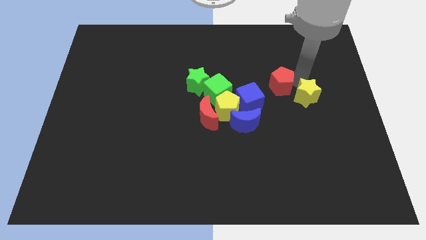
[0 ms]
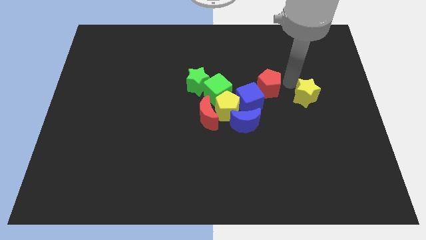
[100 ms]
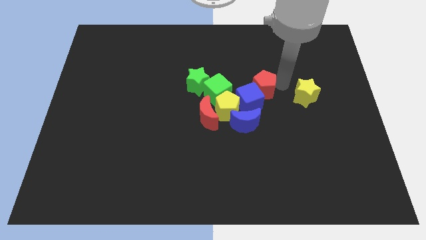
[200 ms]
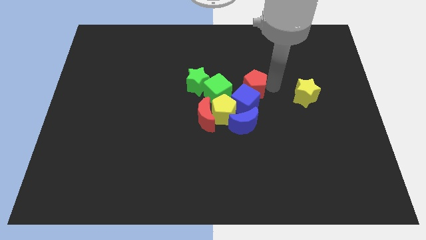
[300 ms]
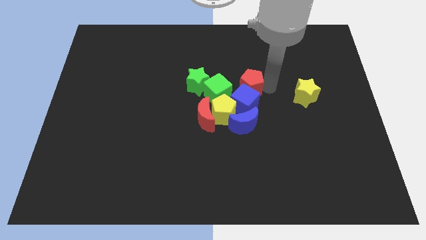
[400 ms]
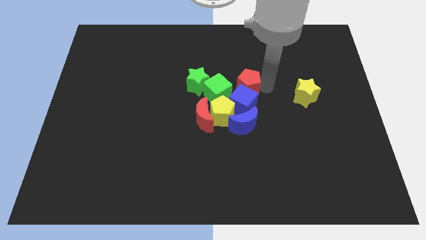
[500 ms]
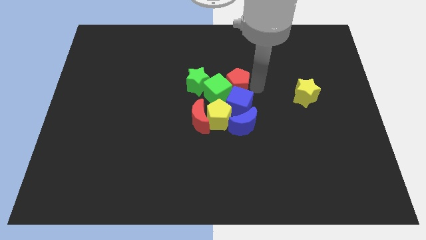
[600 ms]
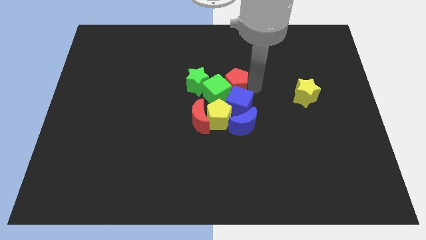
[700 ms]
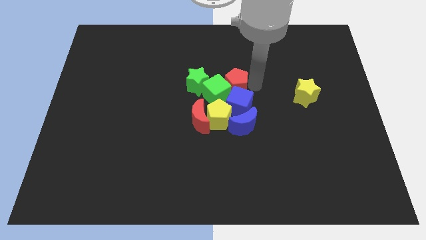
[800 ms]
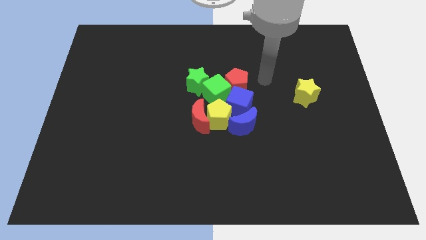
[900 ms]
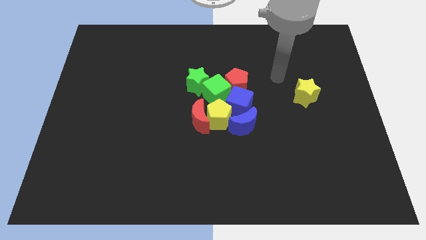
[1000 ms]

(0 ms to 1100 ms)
move the red pentagon into the group of blocks

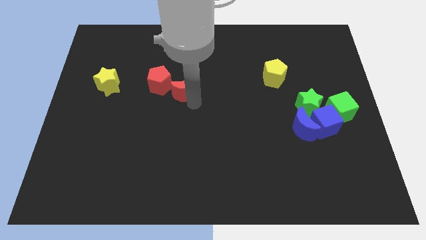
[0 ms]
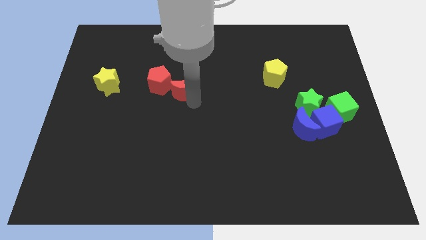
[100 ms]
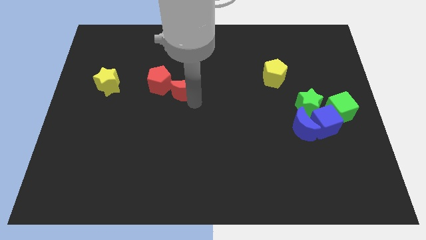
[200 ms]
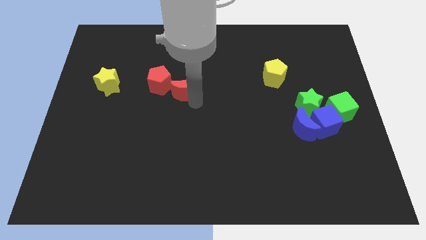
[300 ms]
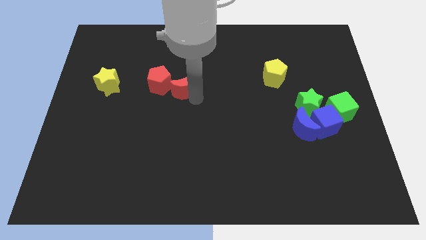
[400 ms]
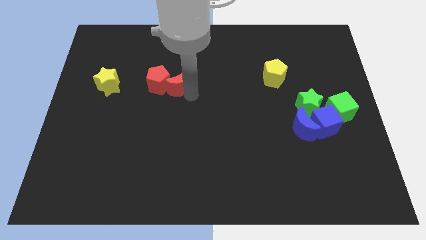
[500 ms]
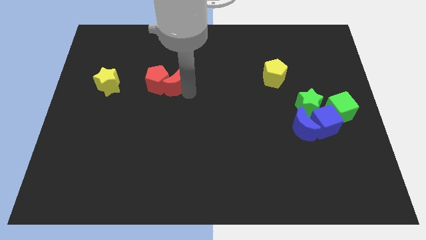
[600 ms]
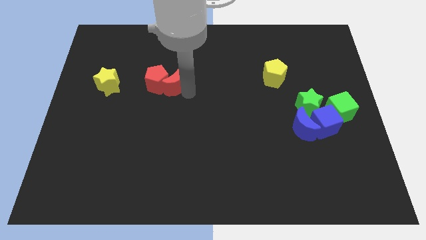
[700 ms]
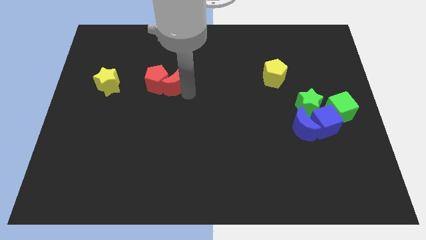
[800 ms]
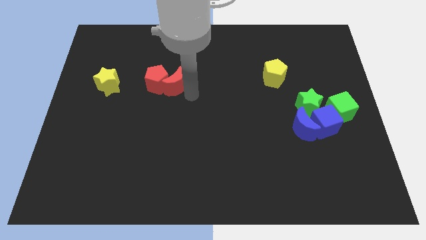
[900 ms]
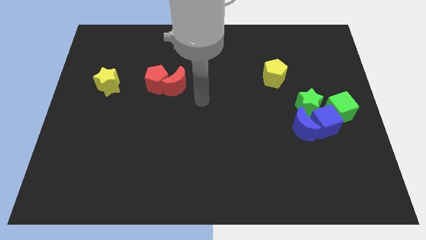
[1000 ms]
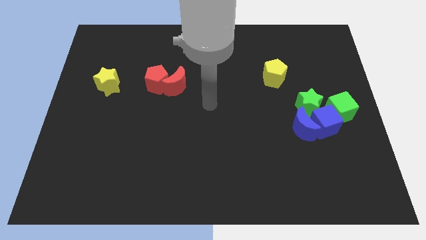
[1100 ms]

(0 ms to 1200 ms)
push the red moon into the red pentagon

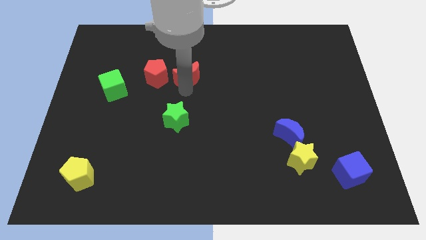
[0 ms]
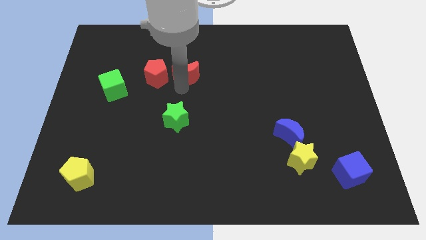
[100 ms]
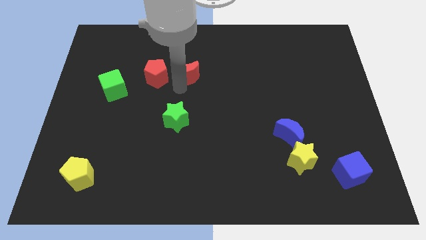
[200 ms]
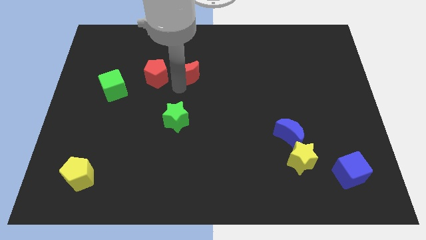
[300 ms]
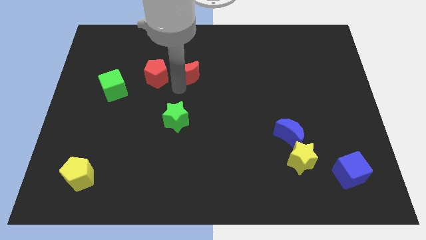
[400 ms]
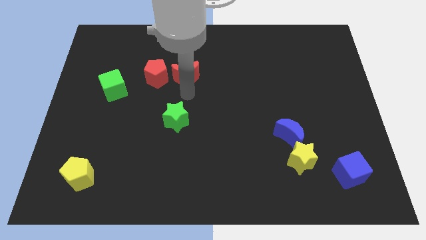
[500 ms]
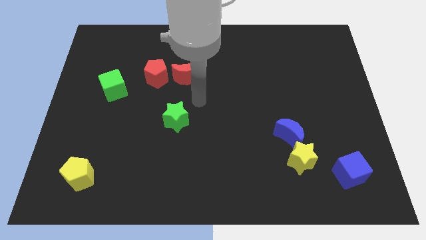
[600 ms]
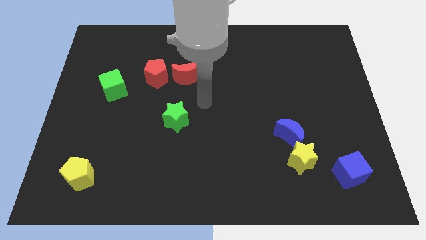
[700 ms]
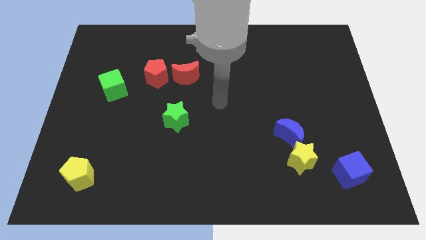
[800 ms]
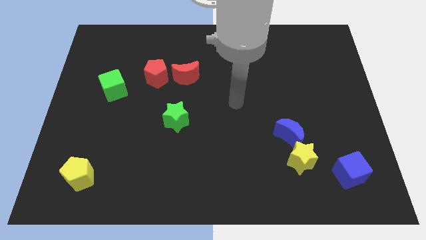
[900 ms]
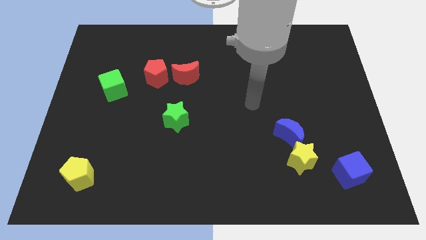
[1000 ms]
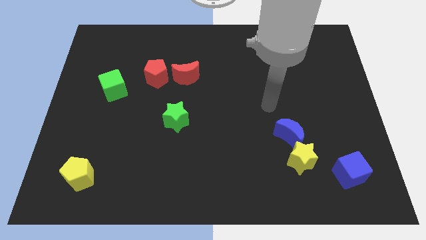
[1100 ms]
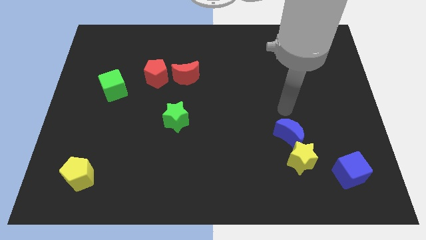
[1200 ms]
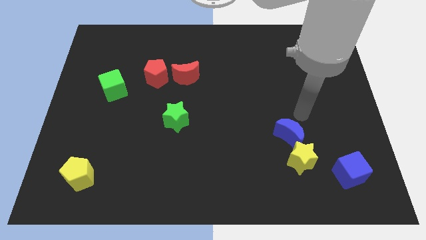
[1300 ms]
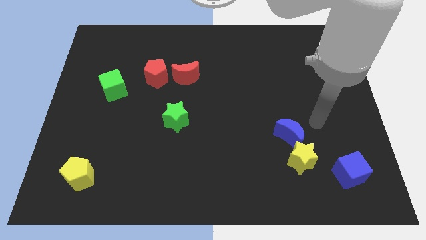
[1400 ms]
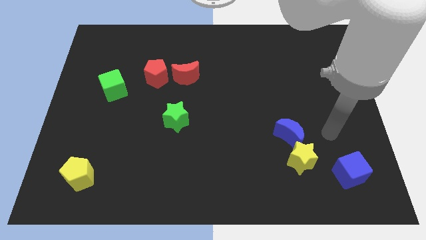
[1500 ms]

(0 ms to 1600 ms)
place your arm top to the blue moon

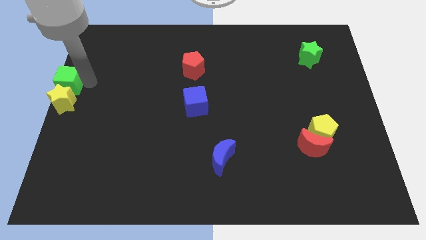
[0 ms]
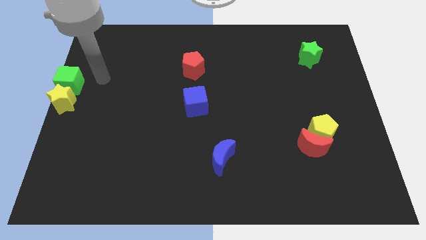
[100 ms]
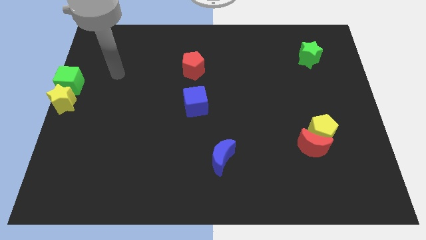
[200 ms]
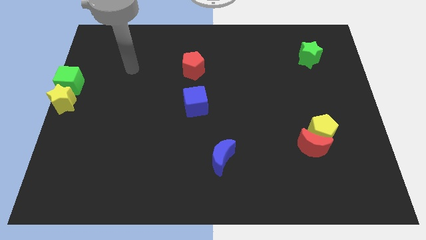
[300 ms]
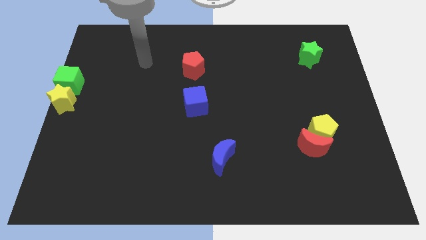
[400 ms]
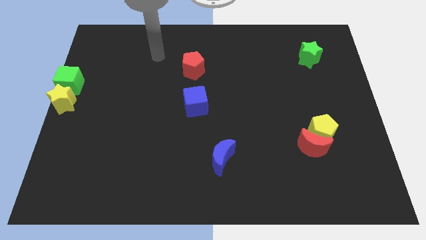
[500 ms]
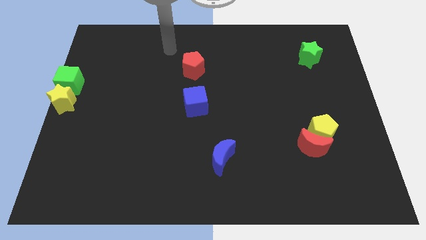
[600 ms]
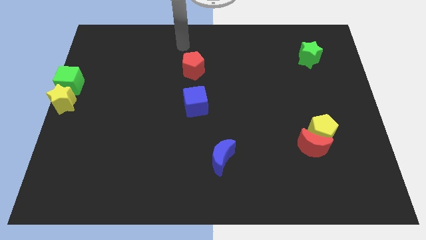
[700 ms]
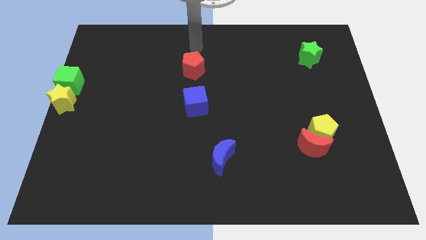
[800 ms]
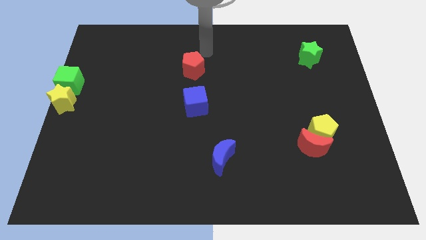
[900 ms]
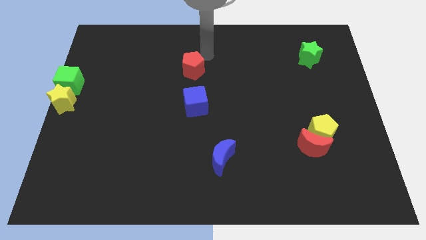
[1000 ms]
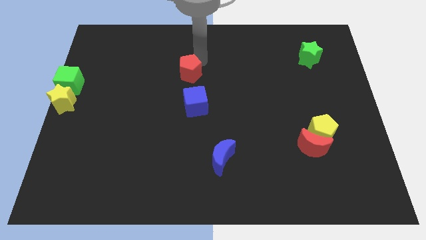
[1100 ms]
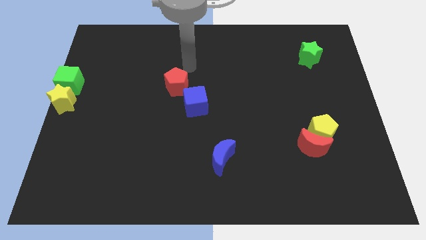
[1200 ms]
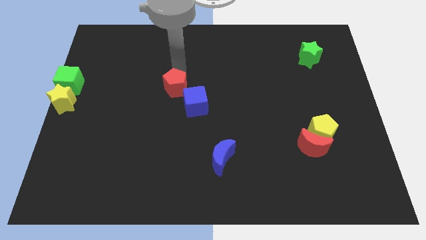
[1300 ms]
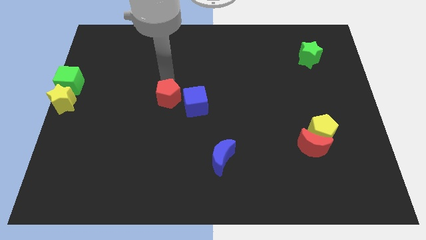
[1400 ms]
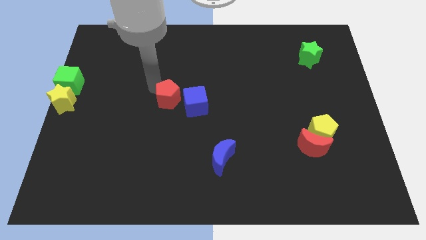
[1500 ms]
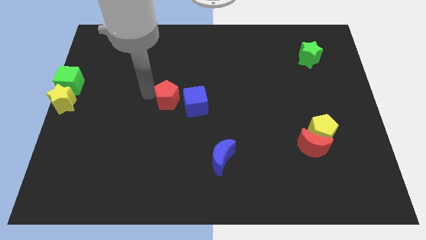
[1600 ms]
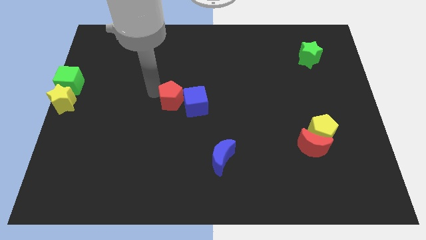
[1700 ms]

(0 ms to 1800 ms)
move the red pentagon to the left of the red pentagon

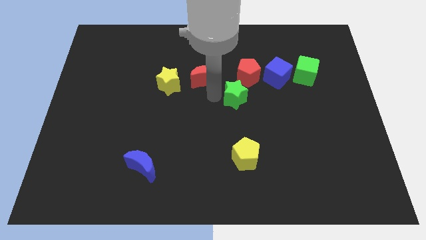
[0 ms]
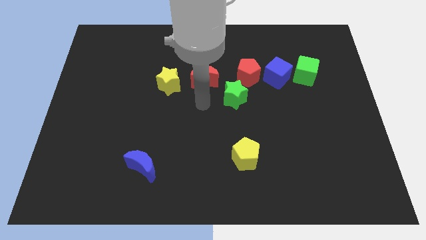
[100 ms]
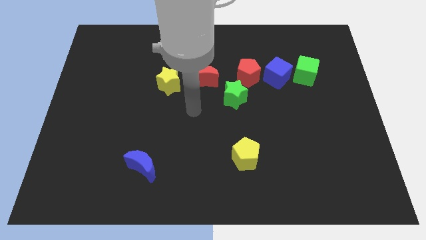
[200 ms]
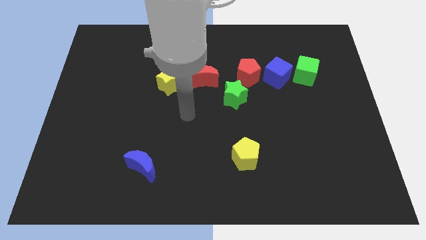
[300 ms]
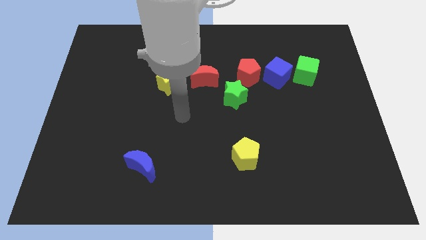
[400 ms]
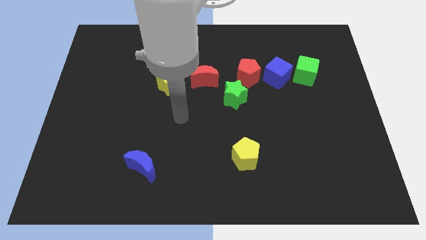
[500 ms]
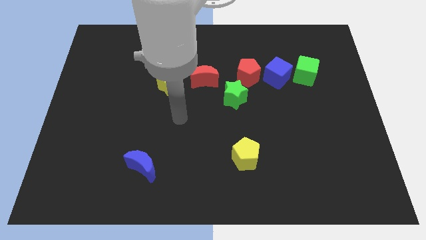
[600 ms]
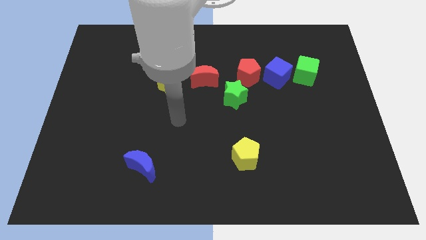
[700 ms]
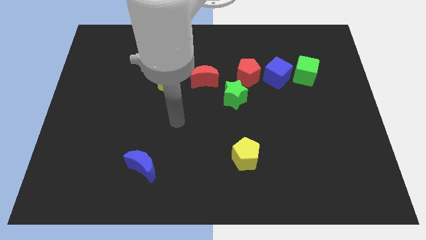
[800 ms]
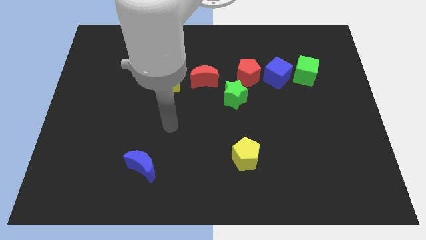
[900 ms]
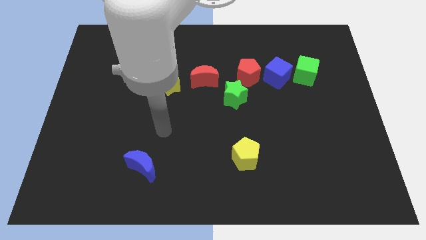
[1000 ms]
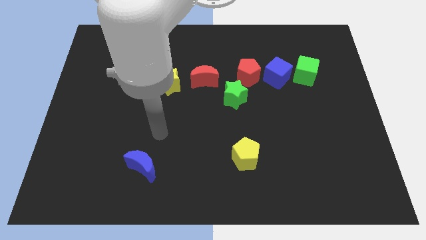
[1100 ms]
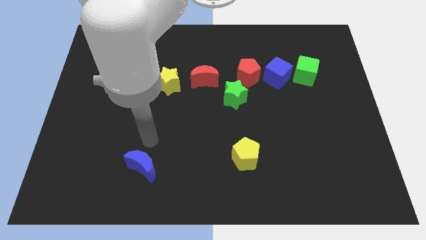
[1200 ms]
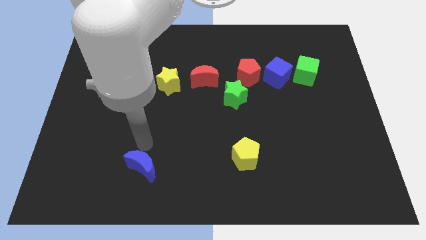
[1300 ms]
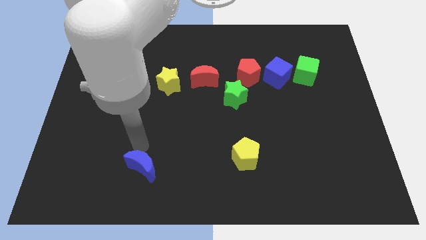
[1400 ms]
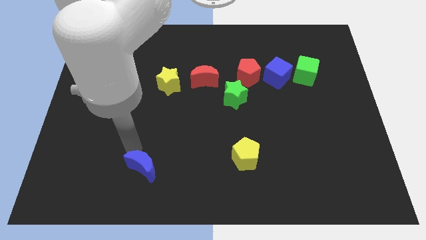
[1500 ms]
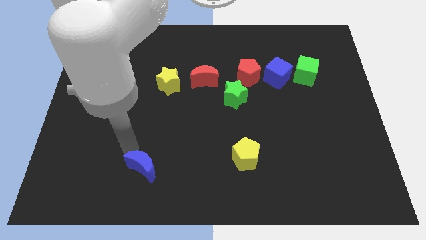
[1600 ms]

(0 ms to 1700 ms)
move your arm towards the top of the blue crescent

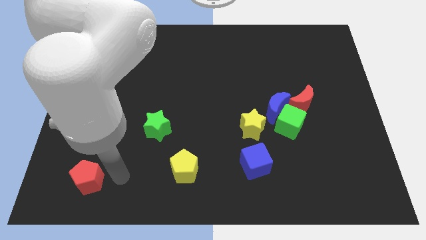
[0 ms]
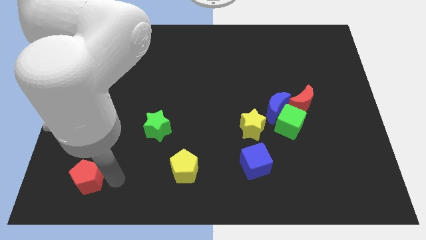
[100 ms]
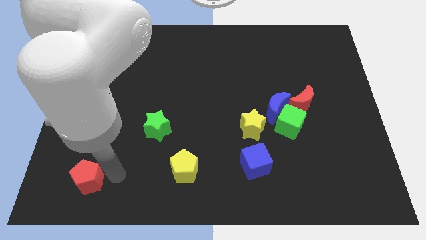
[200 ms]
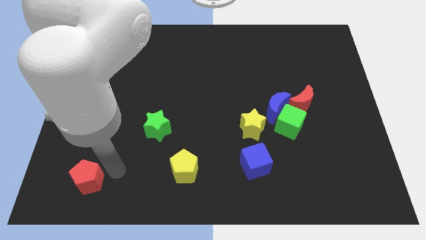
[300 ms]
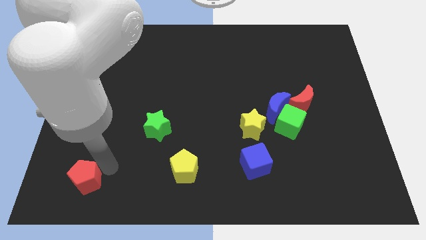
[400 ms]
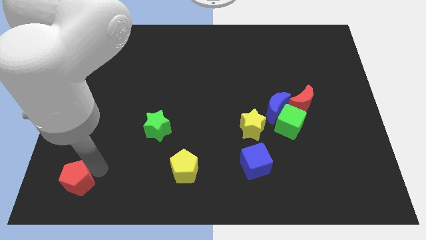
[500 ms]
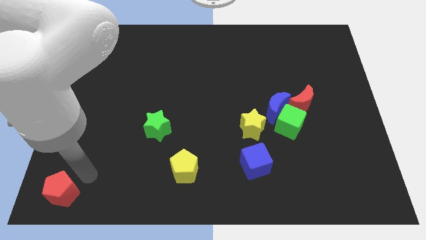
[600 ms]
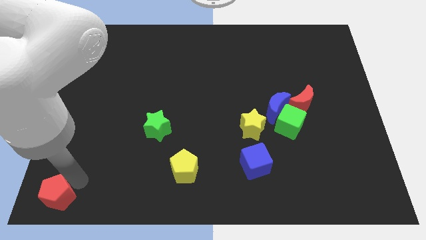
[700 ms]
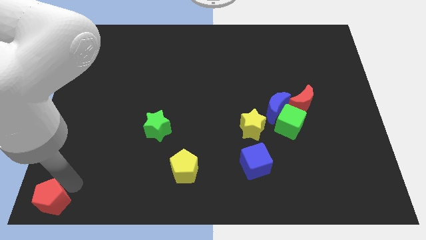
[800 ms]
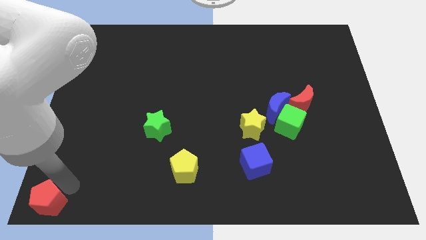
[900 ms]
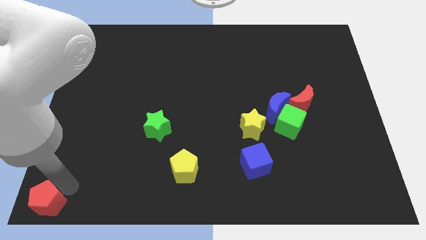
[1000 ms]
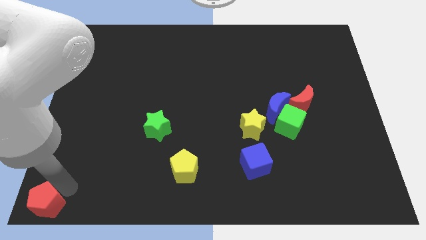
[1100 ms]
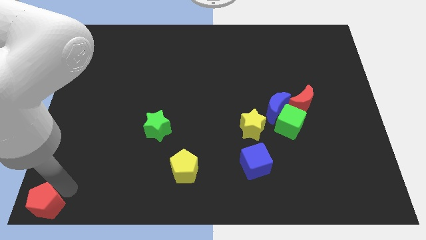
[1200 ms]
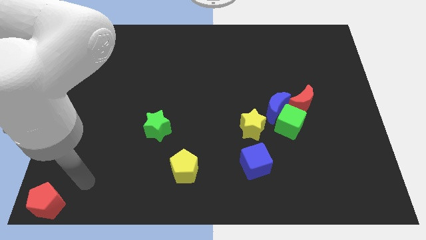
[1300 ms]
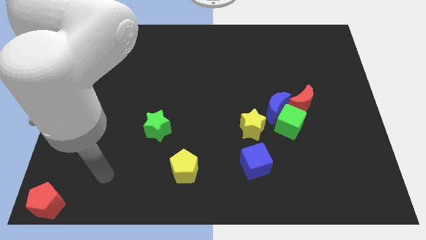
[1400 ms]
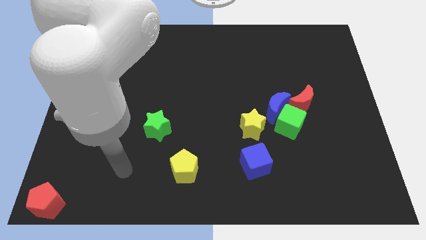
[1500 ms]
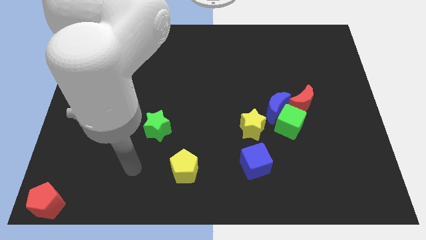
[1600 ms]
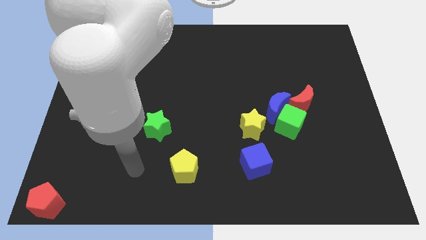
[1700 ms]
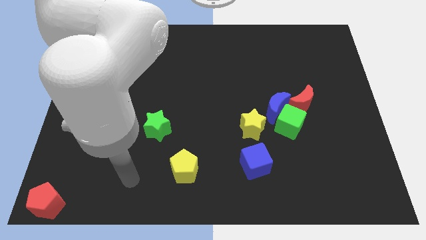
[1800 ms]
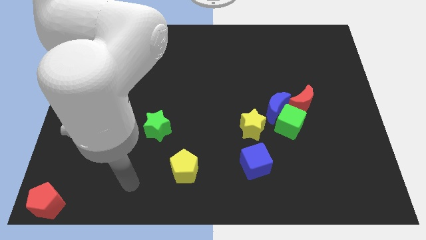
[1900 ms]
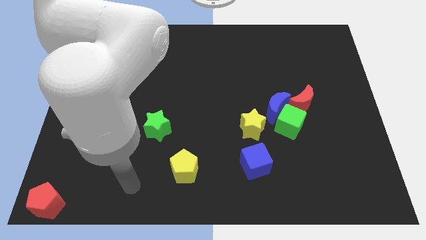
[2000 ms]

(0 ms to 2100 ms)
place red pentagan towards bottom left corner of the board
